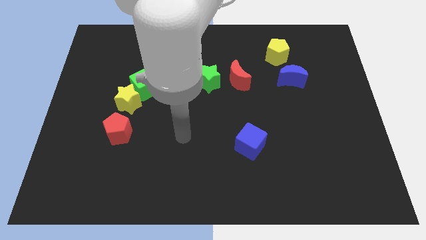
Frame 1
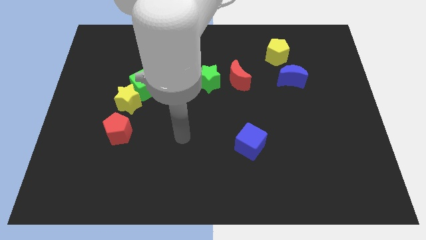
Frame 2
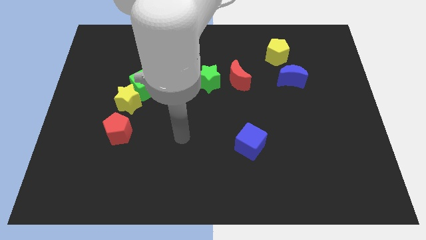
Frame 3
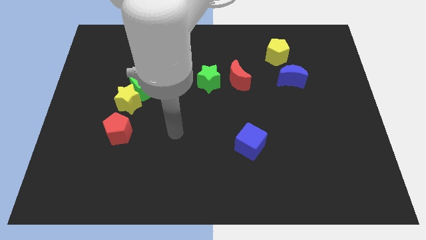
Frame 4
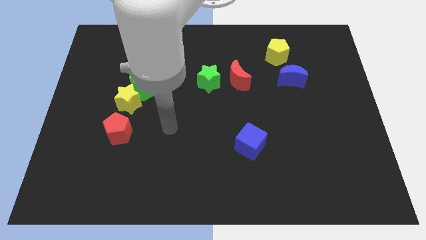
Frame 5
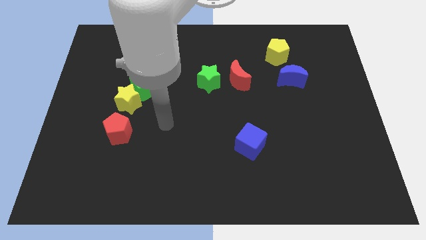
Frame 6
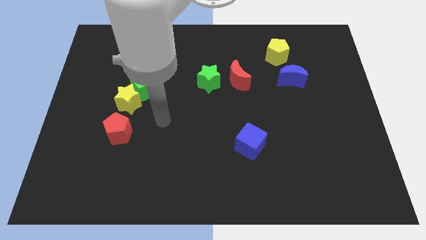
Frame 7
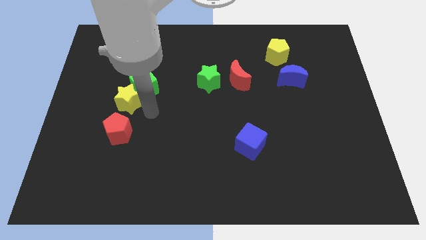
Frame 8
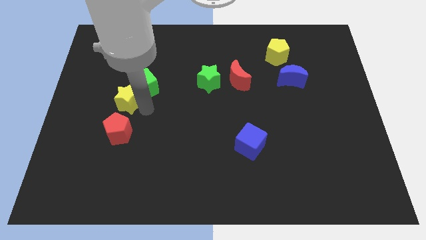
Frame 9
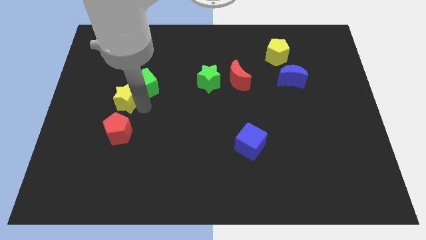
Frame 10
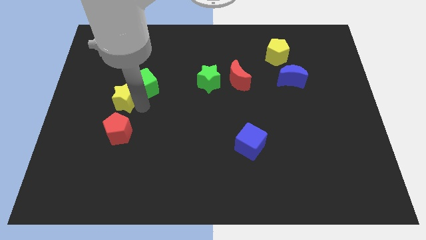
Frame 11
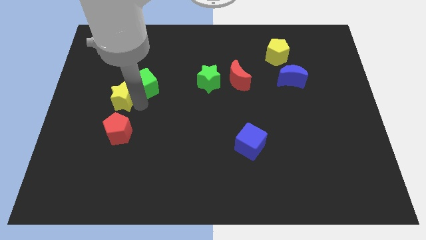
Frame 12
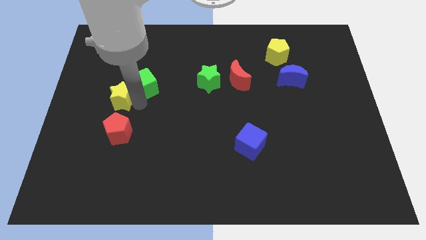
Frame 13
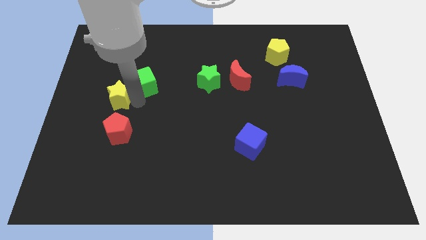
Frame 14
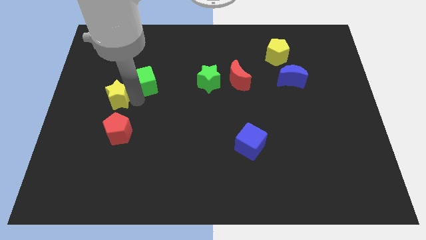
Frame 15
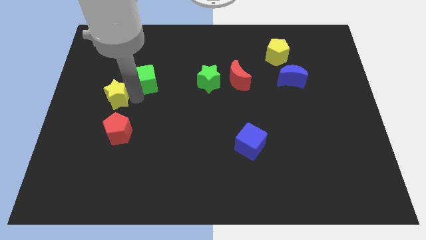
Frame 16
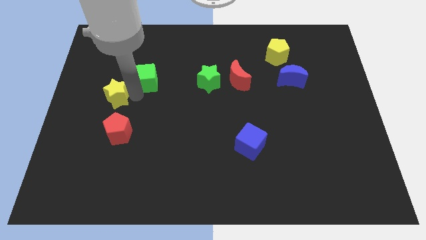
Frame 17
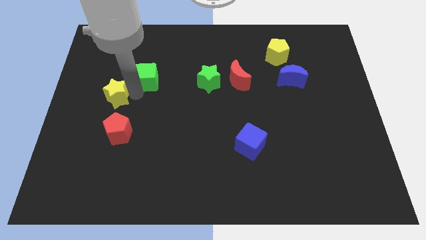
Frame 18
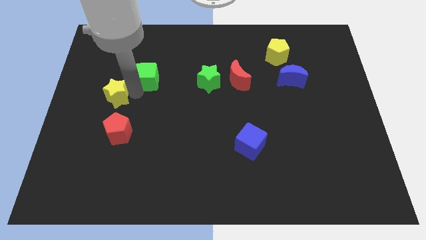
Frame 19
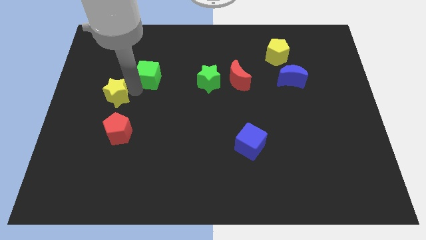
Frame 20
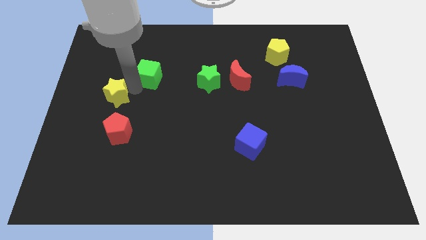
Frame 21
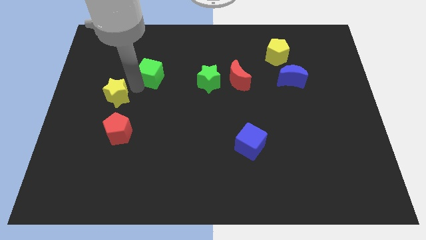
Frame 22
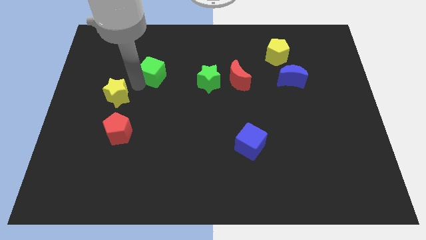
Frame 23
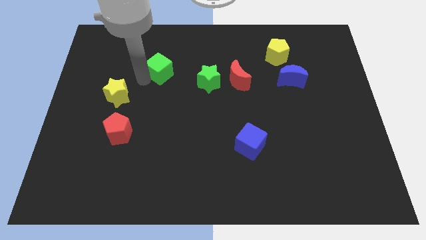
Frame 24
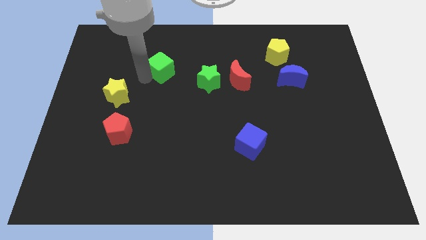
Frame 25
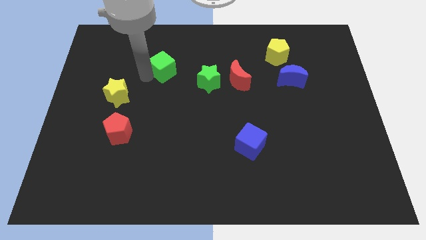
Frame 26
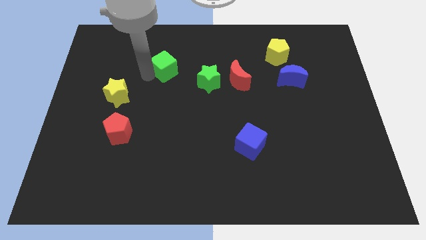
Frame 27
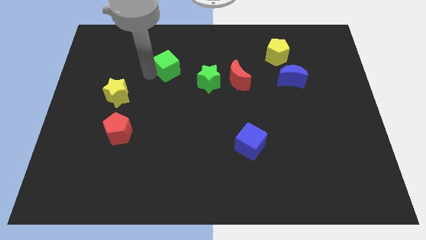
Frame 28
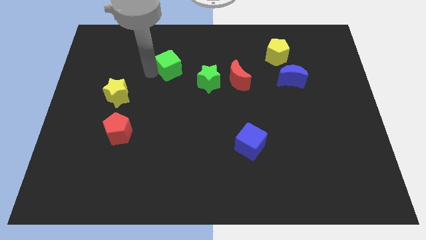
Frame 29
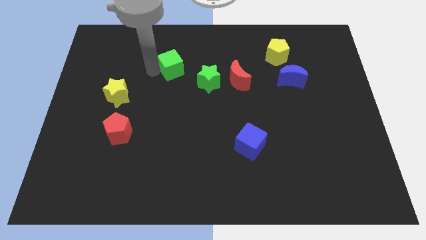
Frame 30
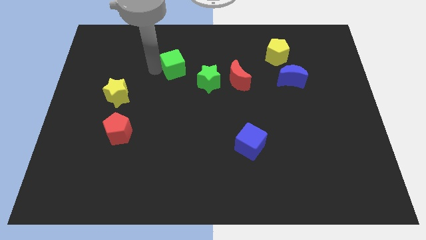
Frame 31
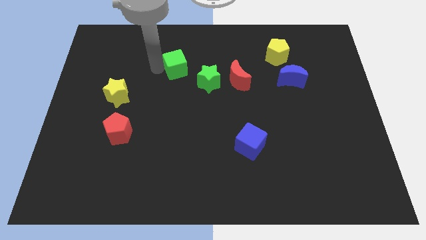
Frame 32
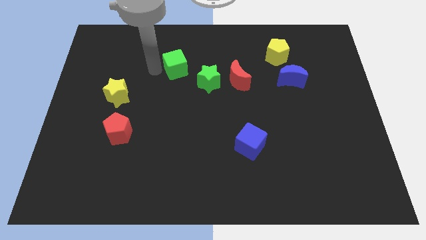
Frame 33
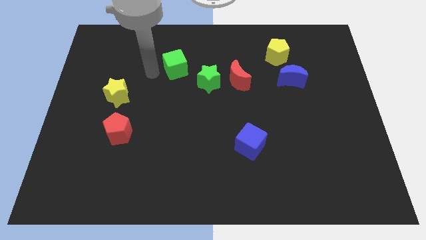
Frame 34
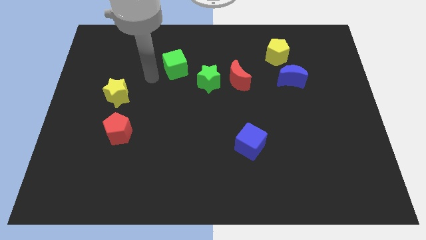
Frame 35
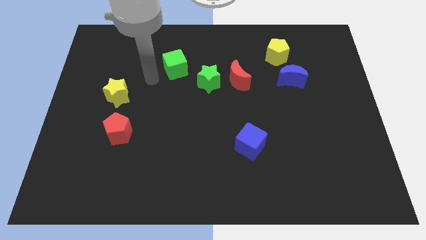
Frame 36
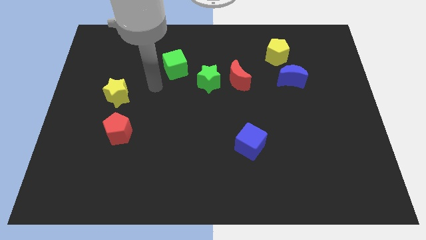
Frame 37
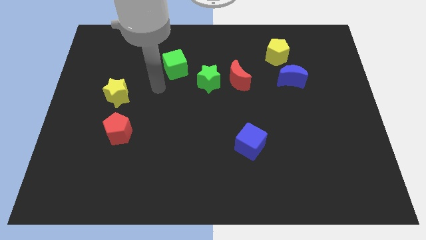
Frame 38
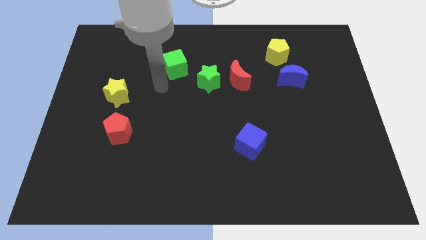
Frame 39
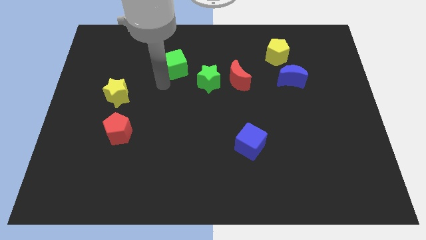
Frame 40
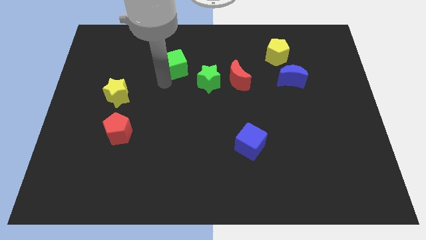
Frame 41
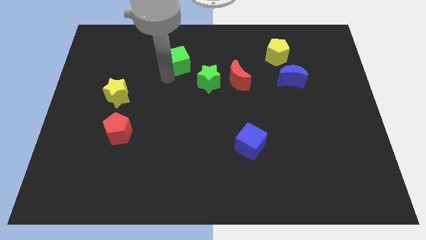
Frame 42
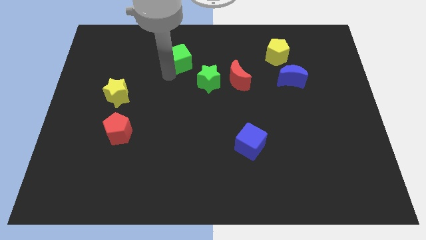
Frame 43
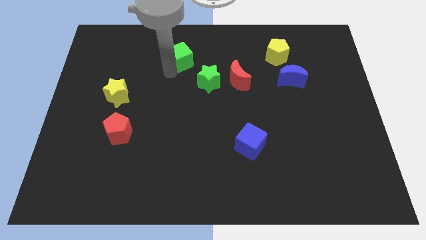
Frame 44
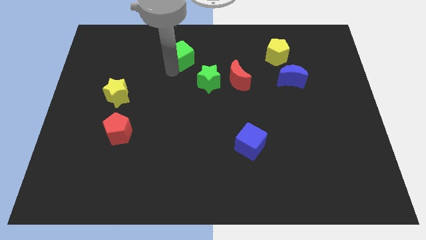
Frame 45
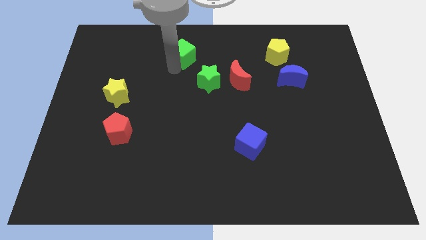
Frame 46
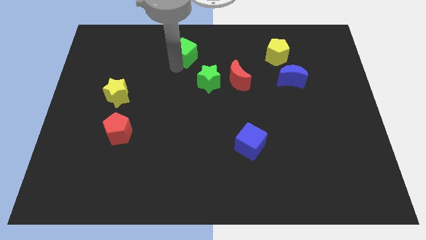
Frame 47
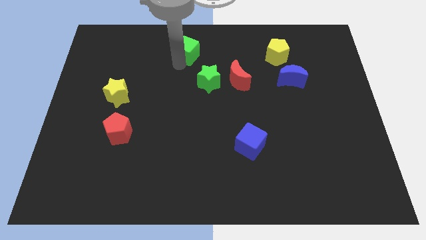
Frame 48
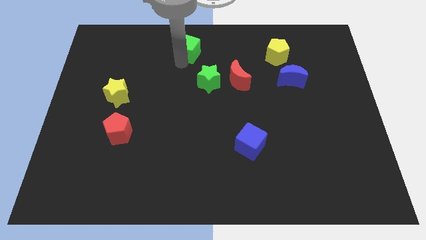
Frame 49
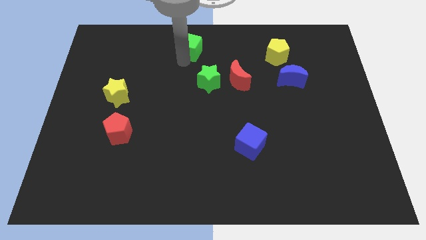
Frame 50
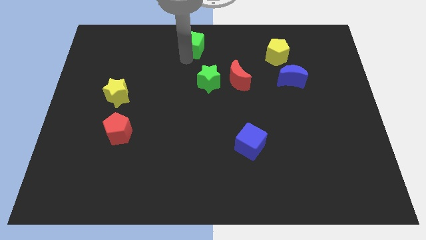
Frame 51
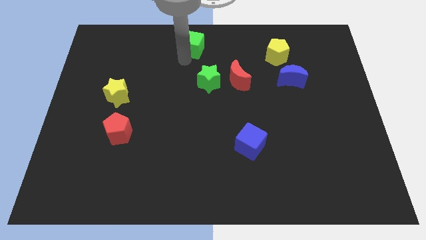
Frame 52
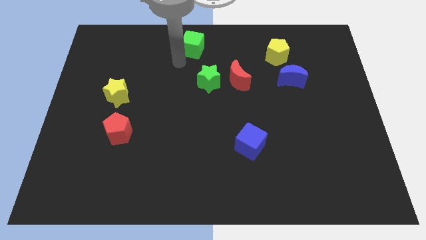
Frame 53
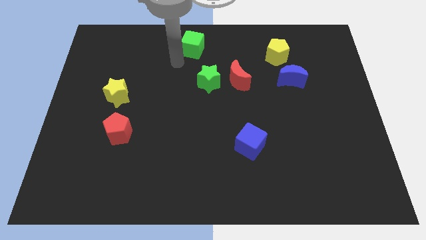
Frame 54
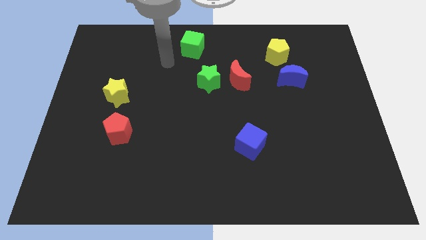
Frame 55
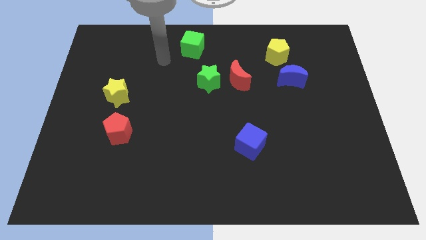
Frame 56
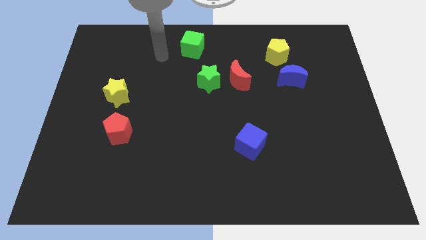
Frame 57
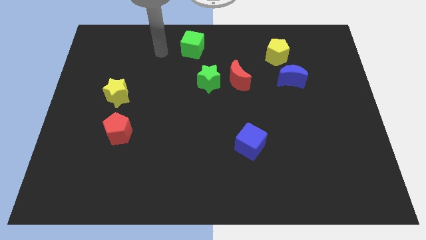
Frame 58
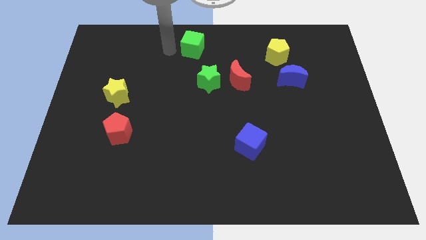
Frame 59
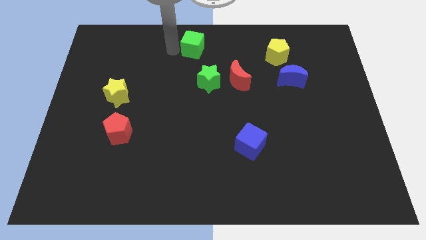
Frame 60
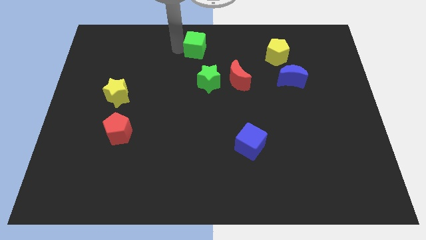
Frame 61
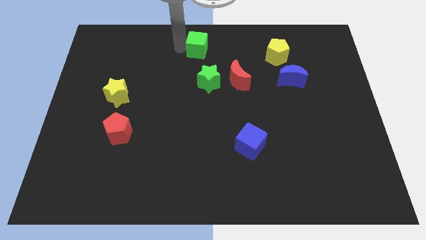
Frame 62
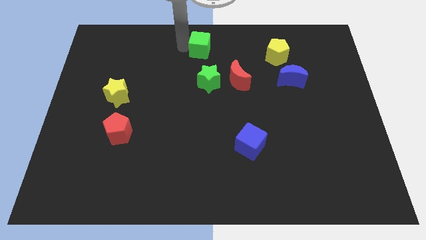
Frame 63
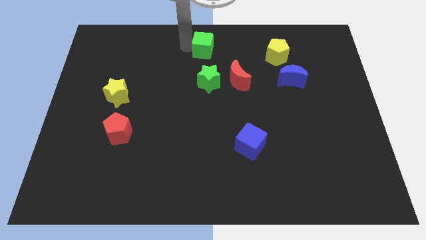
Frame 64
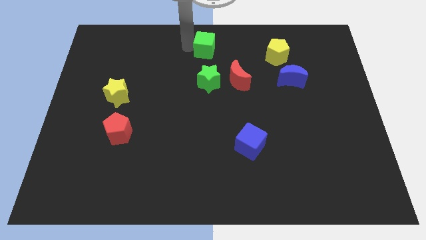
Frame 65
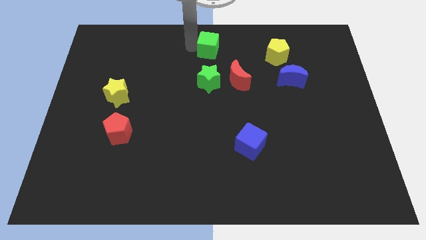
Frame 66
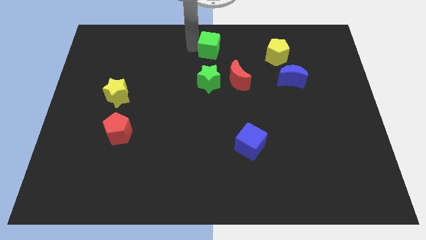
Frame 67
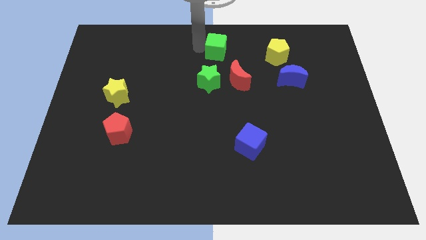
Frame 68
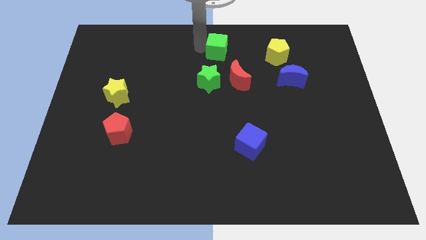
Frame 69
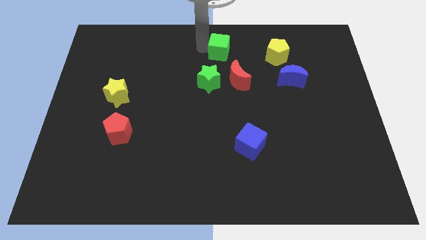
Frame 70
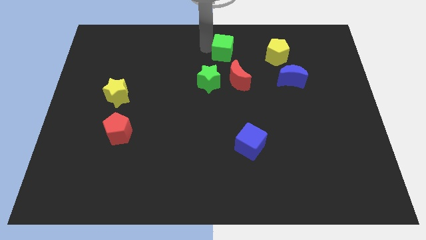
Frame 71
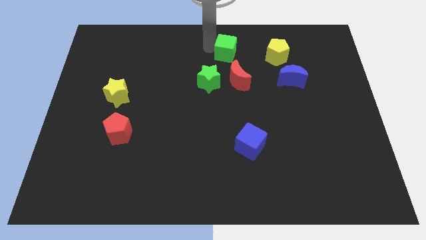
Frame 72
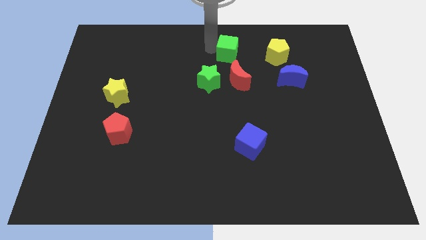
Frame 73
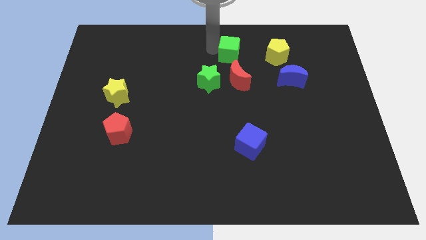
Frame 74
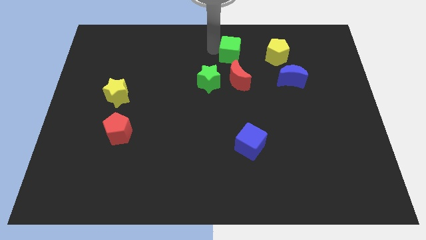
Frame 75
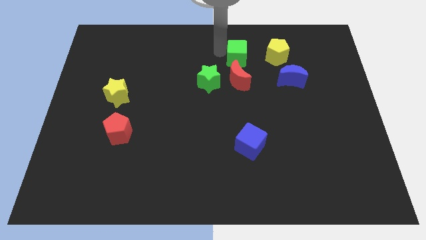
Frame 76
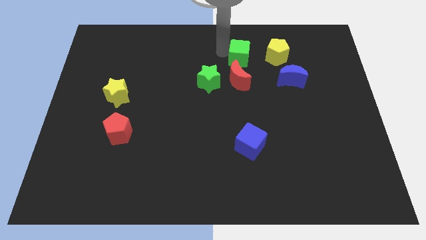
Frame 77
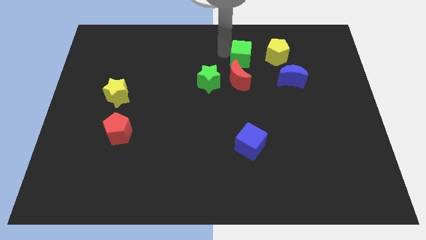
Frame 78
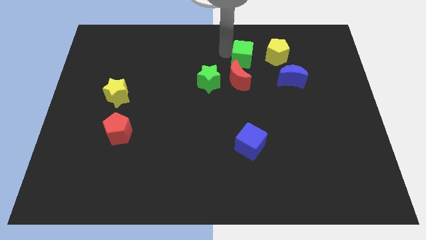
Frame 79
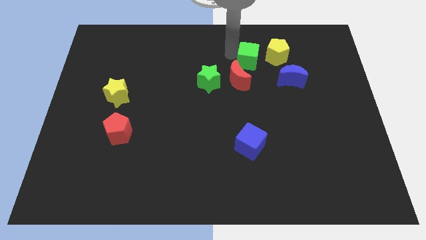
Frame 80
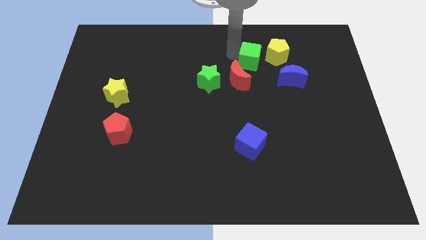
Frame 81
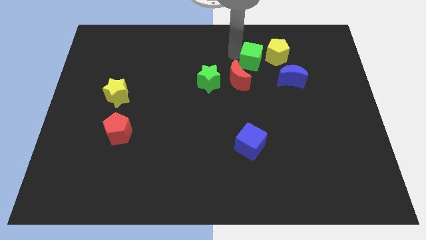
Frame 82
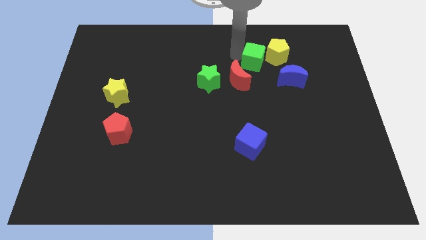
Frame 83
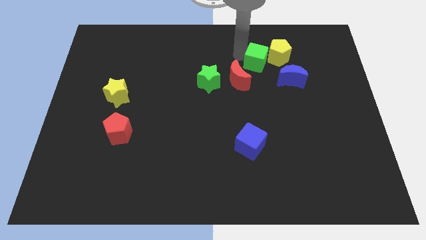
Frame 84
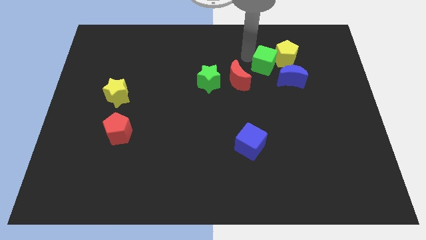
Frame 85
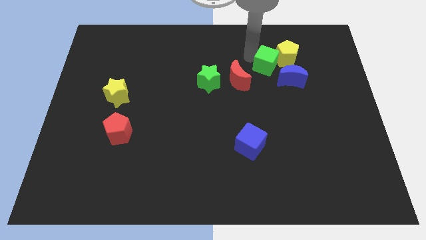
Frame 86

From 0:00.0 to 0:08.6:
push the green cube towards the yellow pentagon
